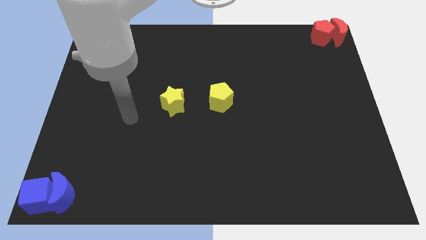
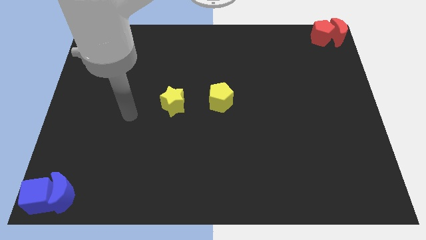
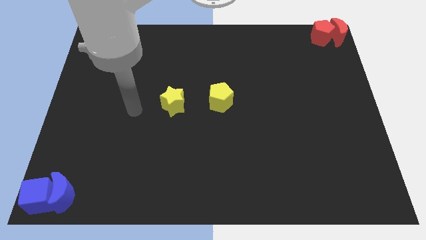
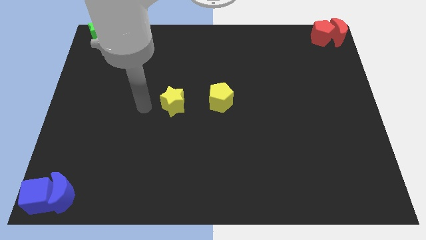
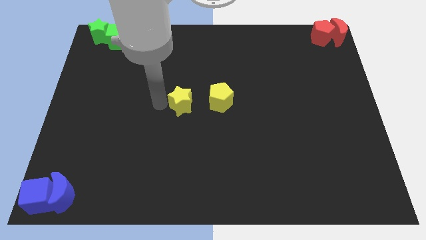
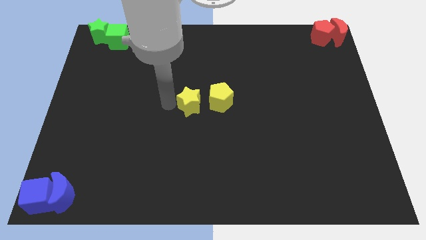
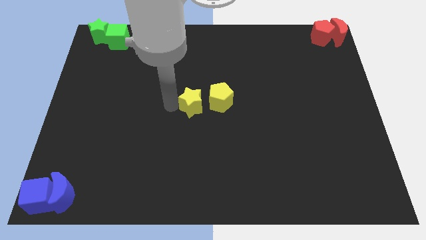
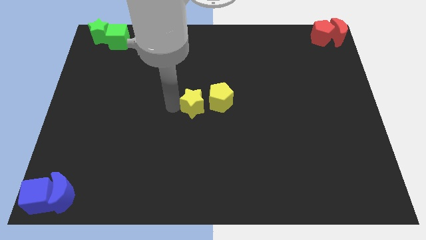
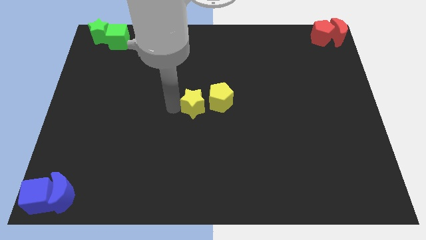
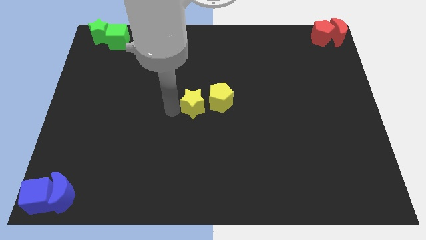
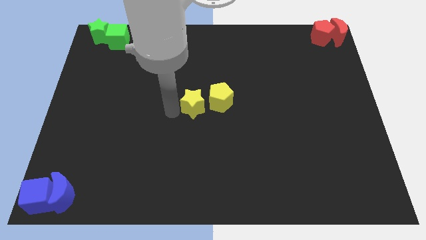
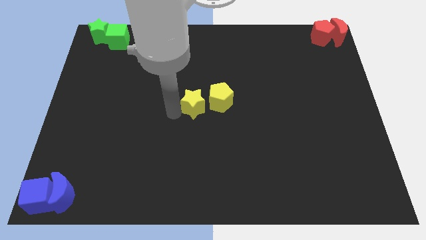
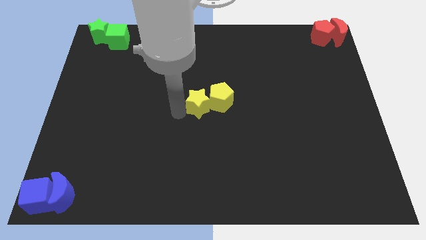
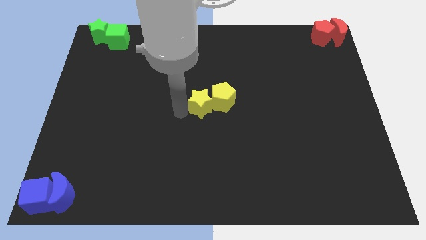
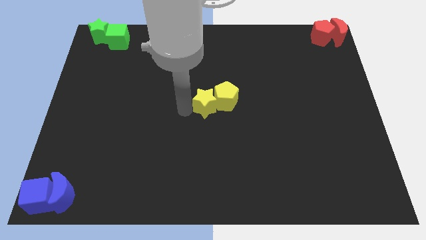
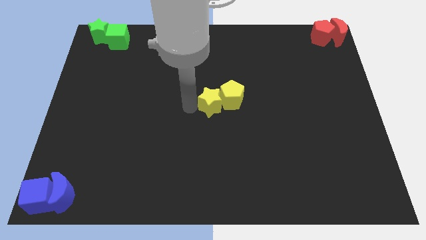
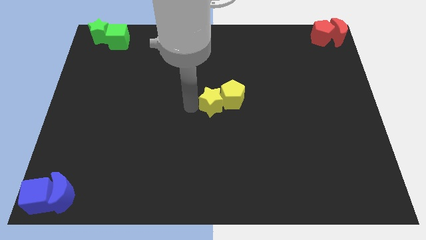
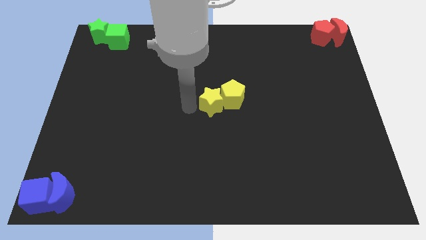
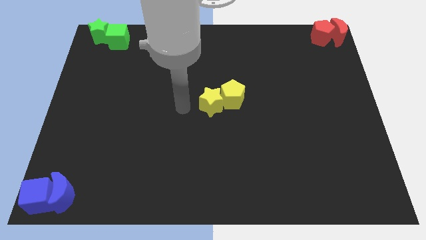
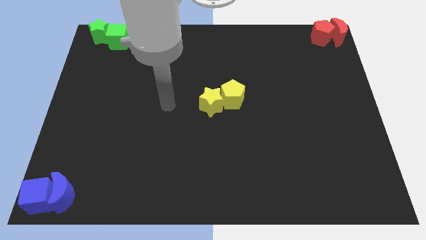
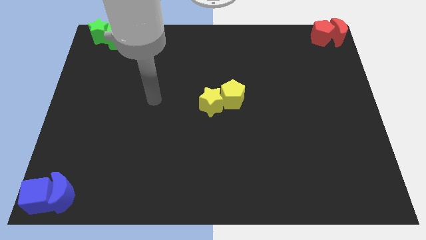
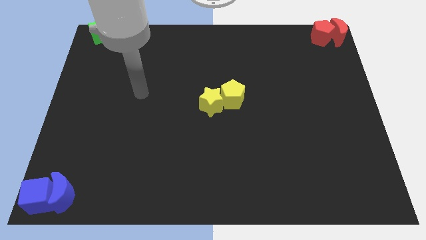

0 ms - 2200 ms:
place the yellow star to the left of the yellow pentagon

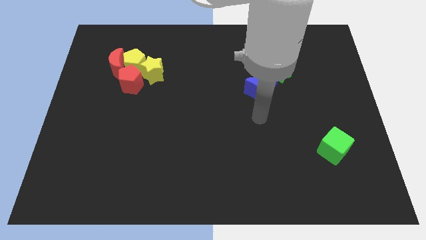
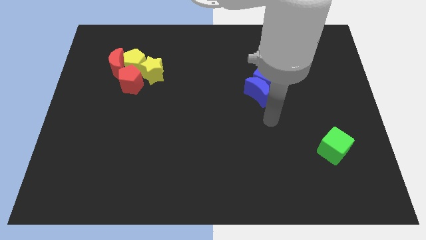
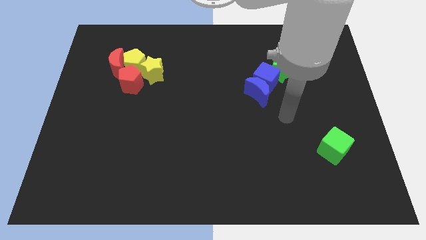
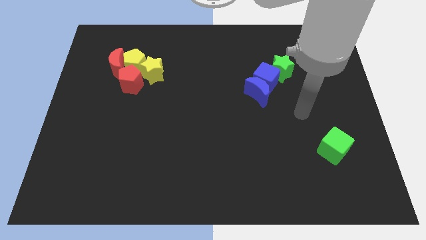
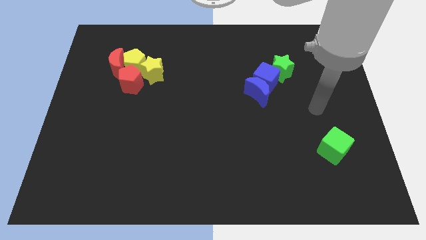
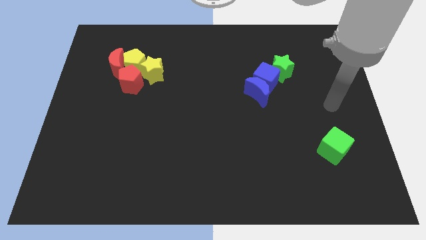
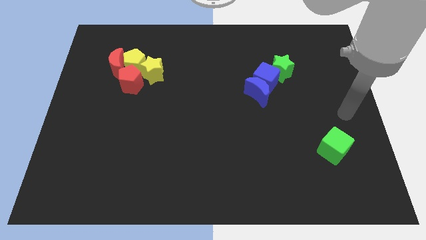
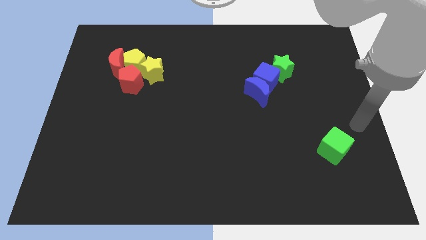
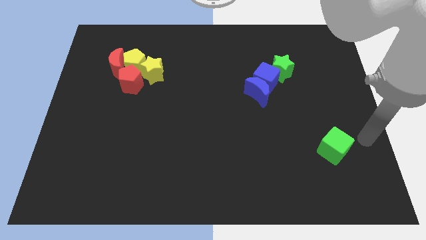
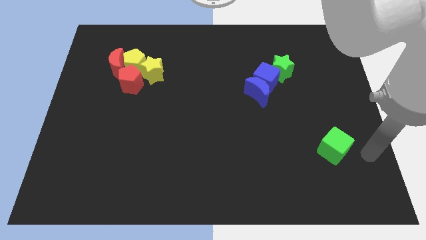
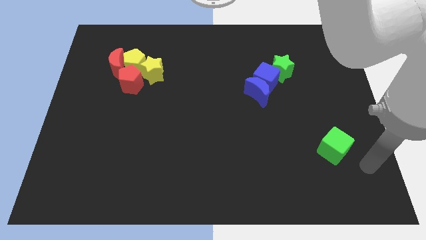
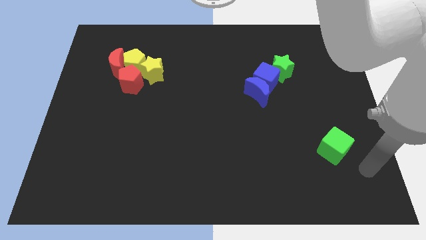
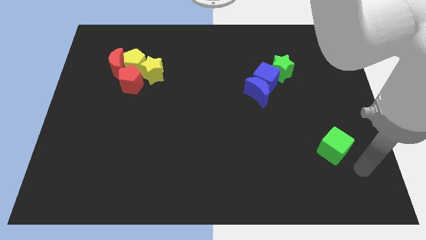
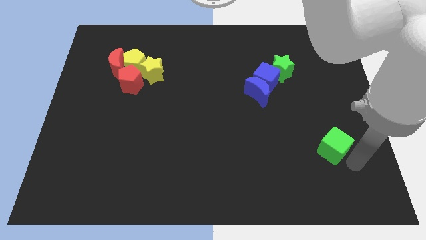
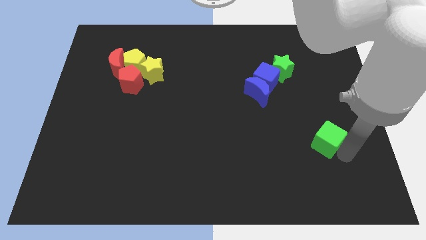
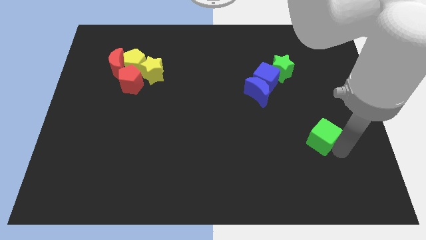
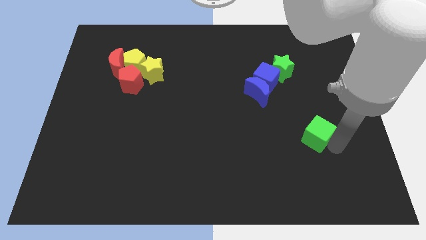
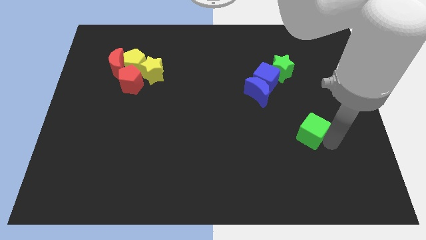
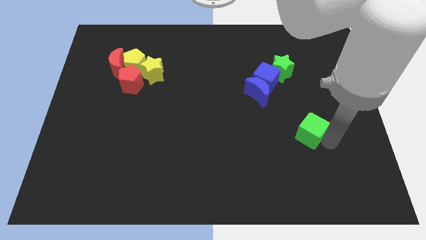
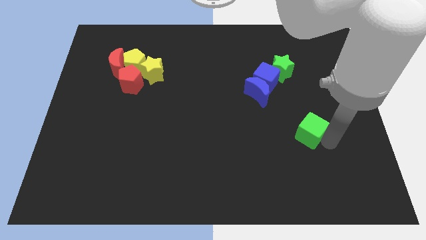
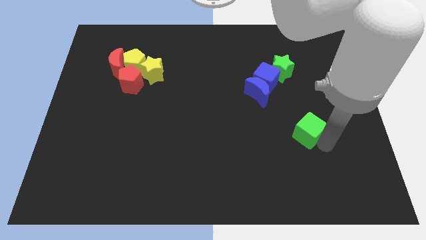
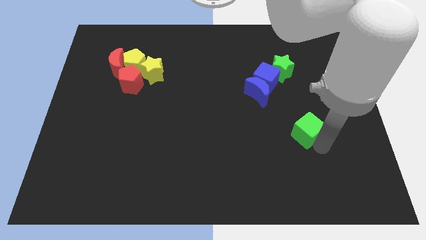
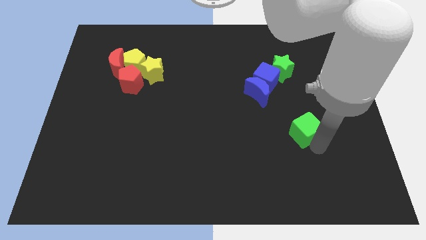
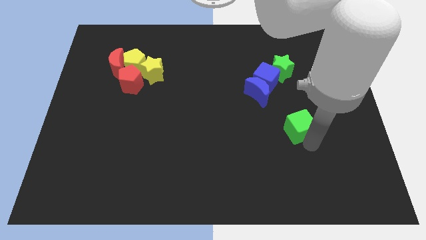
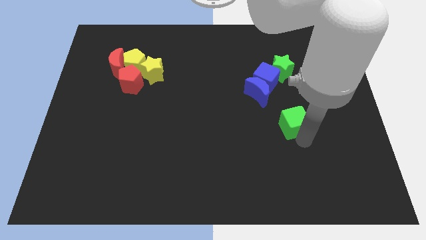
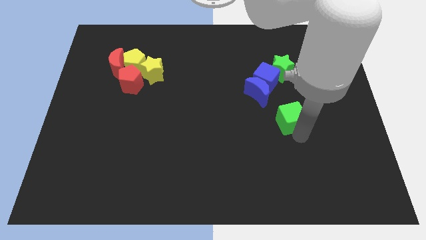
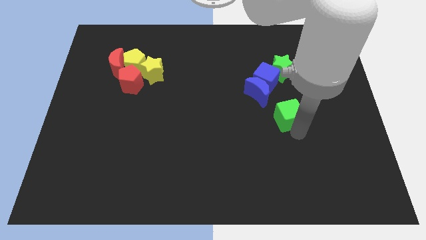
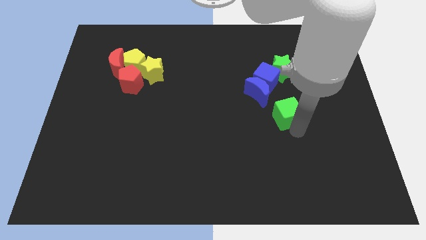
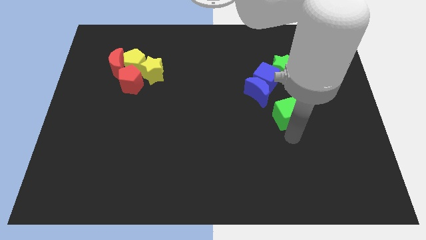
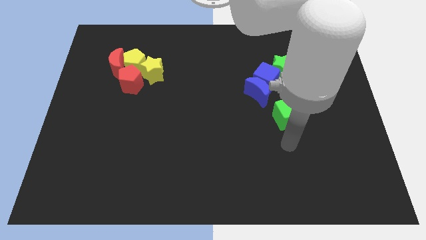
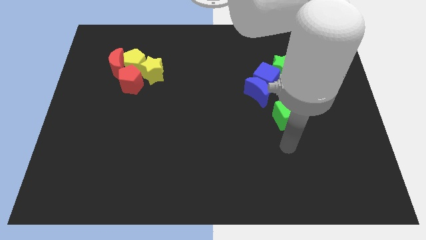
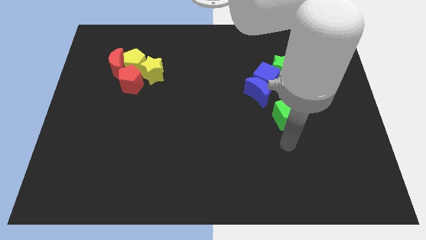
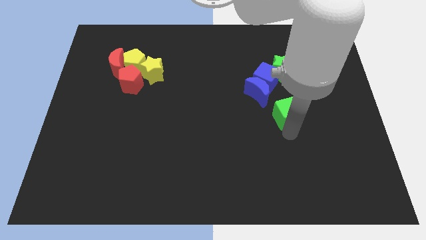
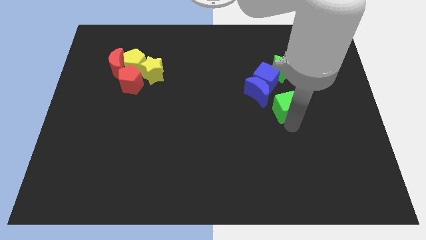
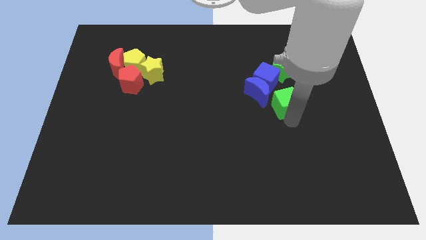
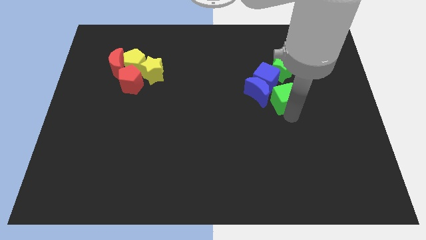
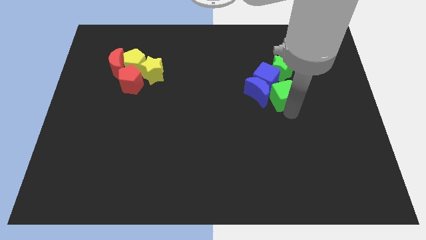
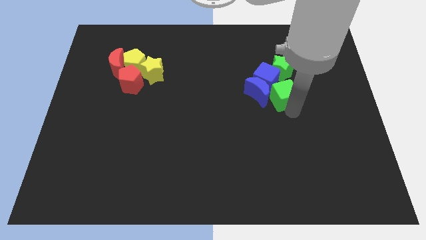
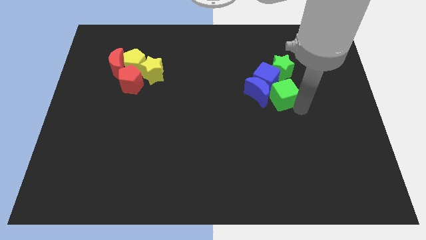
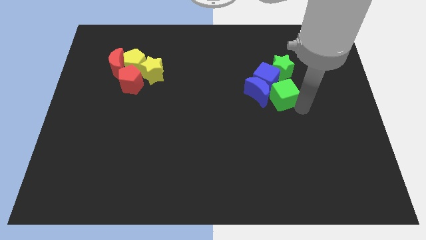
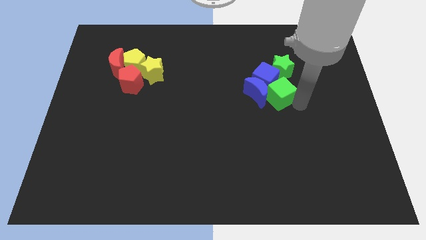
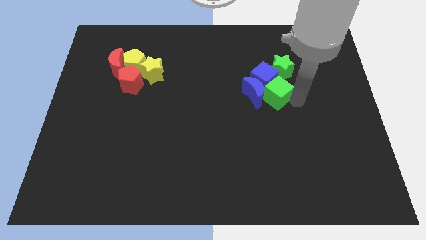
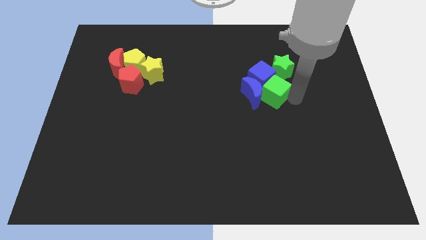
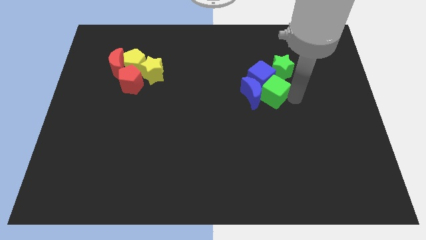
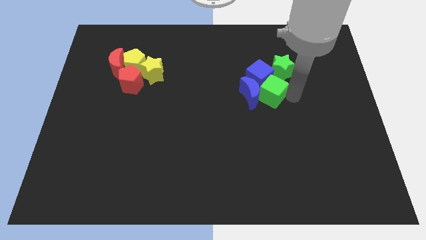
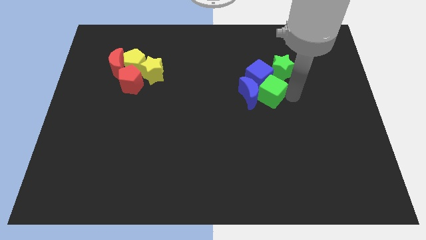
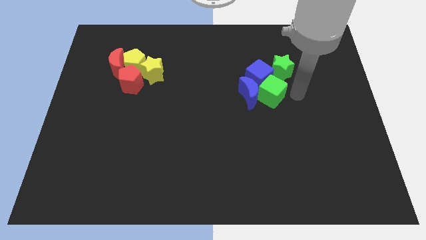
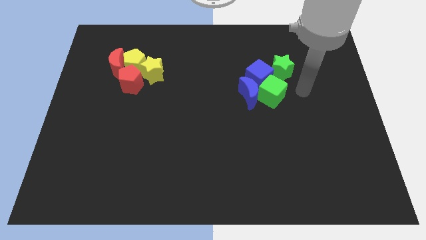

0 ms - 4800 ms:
push the green cube into blue cube

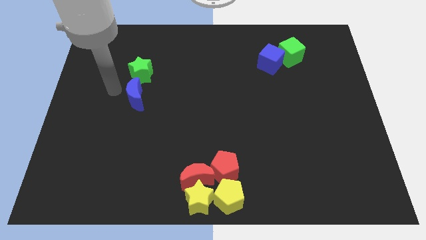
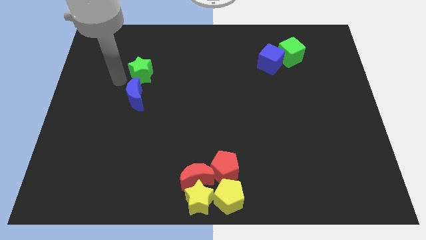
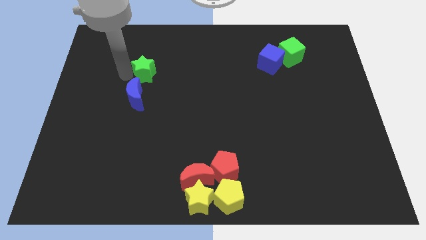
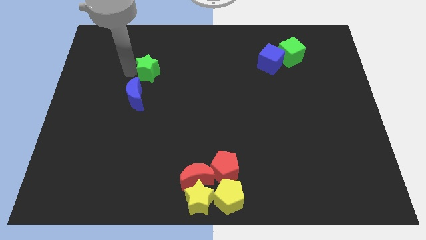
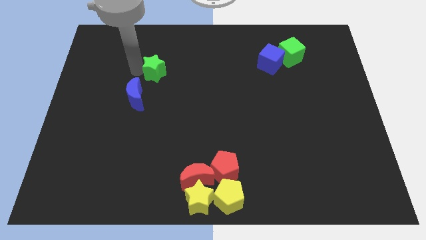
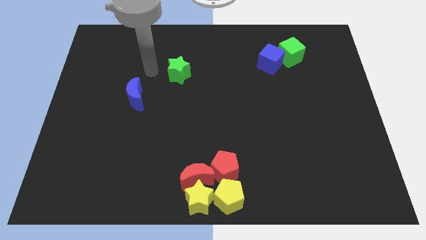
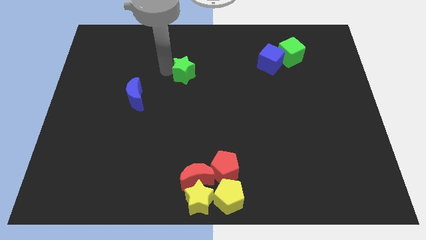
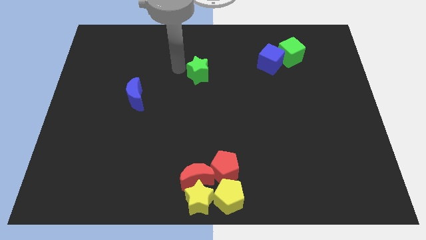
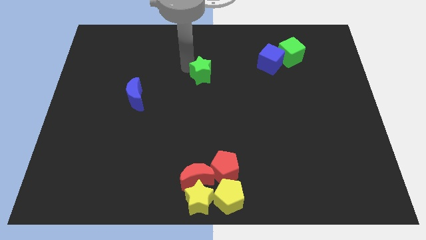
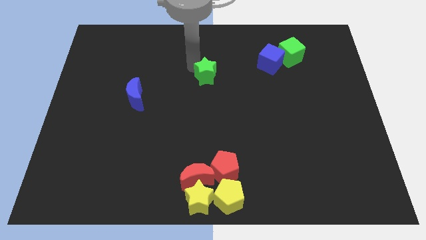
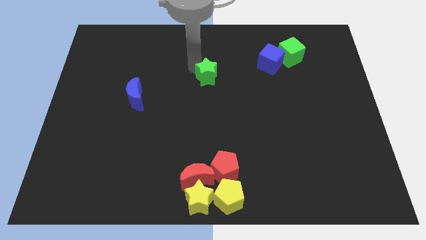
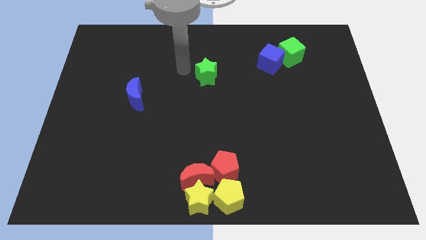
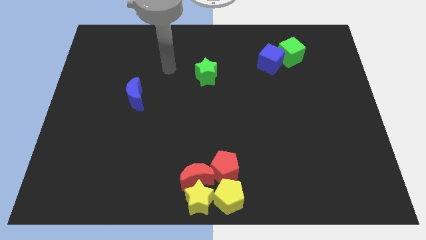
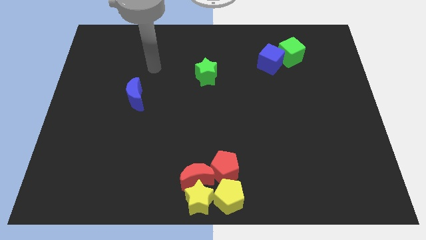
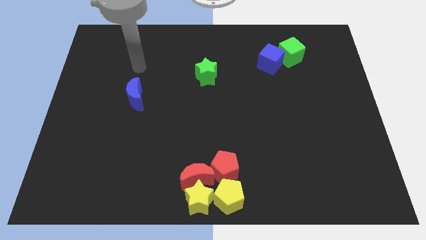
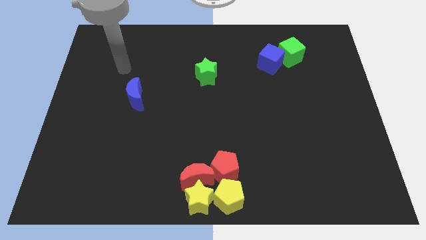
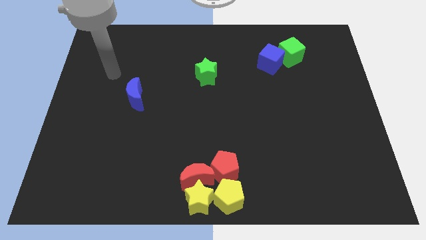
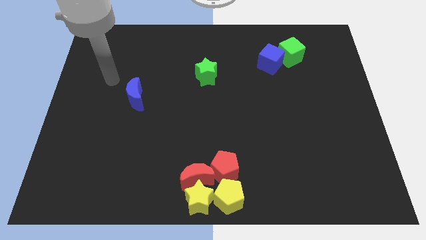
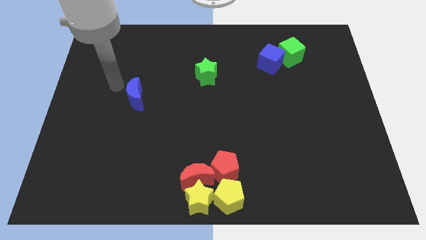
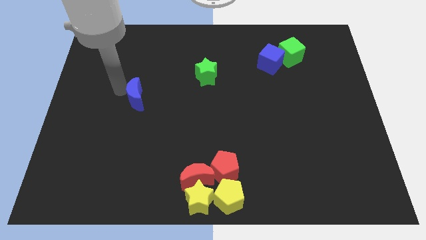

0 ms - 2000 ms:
separate the green star from the blue moon
